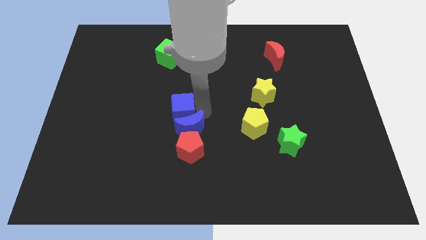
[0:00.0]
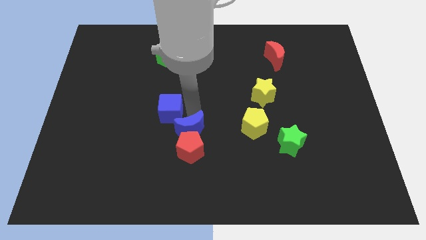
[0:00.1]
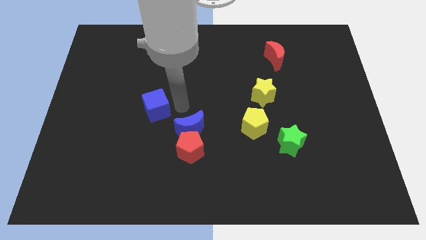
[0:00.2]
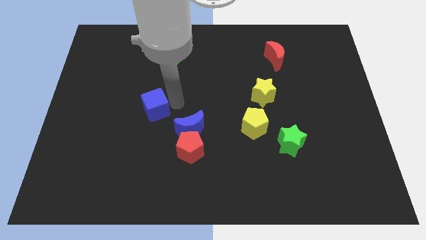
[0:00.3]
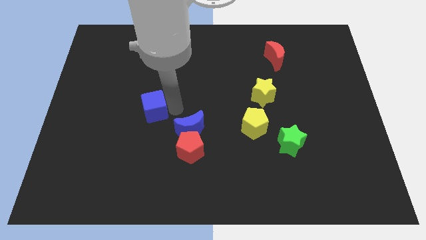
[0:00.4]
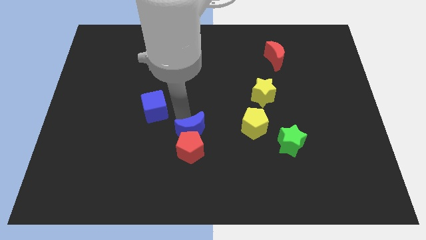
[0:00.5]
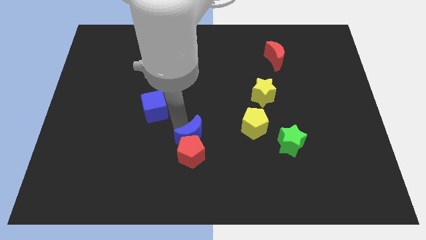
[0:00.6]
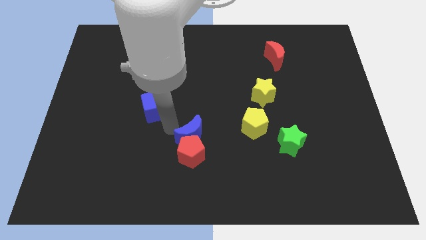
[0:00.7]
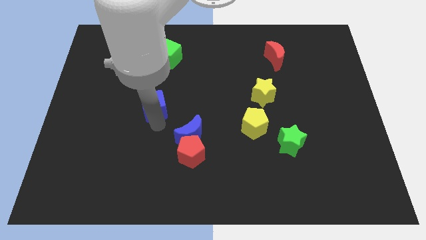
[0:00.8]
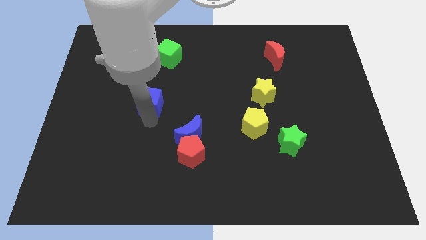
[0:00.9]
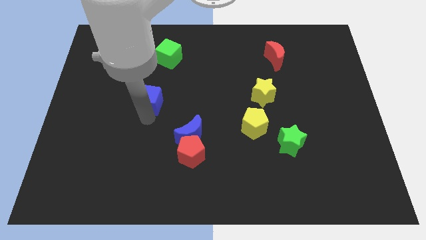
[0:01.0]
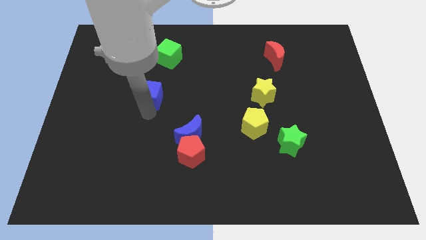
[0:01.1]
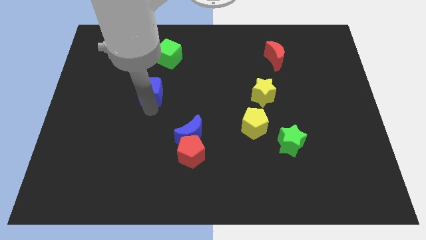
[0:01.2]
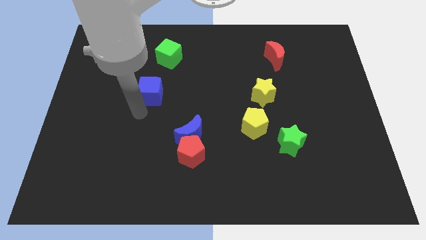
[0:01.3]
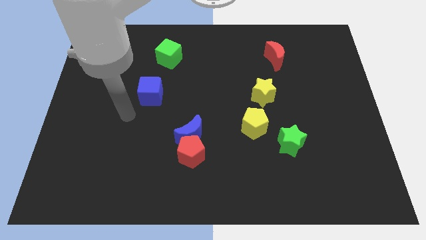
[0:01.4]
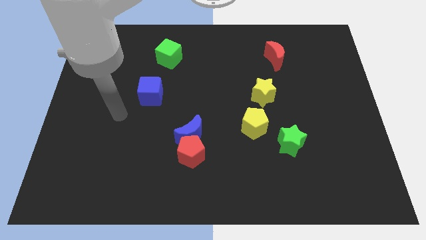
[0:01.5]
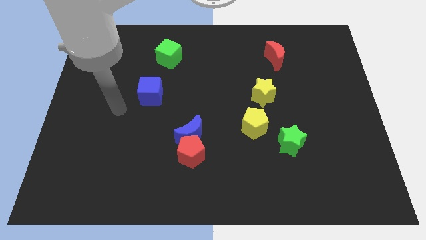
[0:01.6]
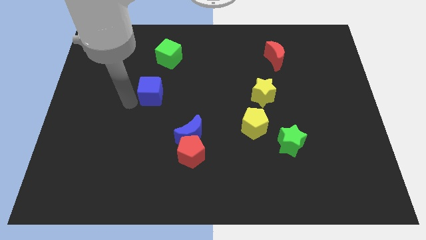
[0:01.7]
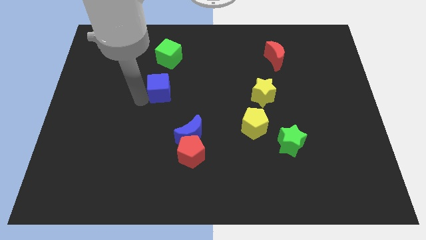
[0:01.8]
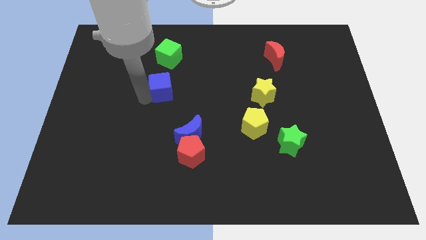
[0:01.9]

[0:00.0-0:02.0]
move the blue cube below the green cube

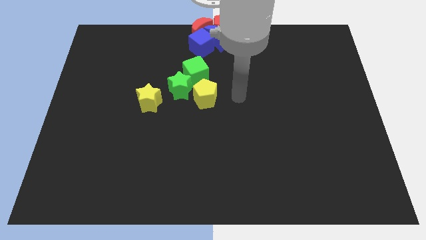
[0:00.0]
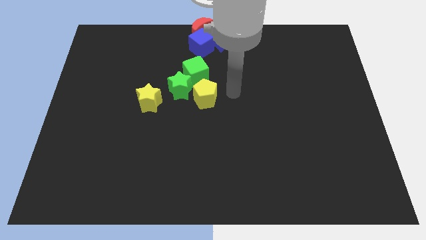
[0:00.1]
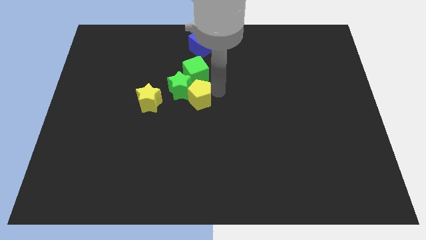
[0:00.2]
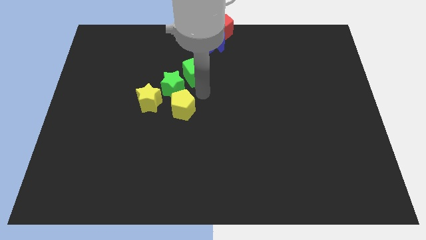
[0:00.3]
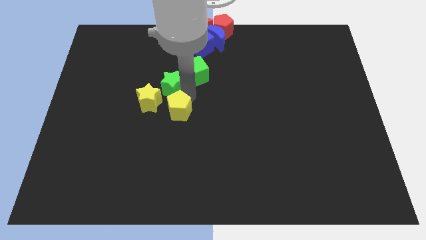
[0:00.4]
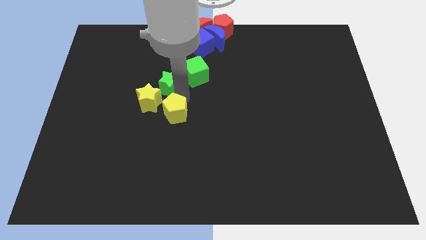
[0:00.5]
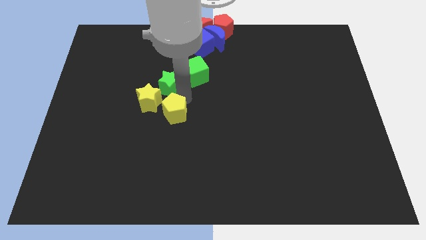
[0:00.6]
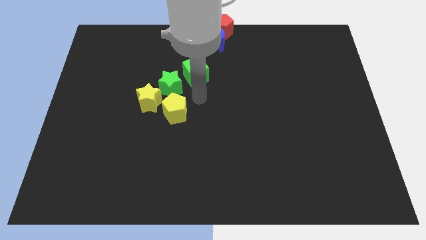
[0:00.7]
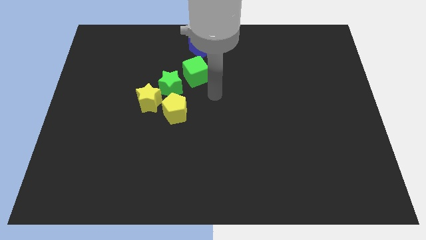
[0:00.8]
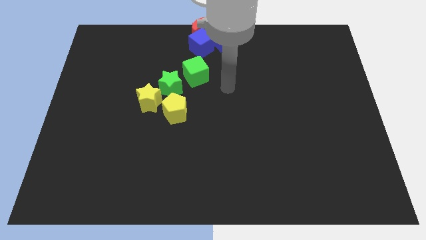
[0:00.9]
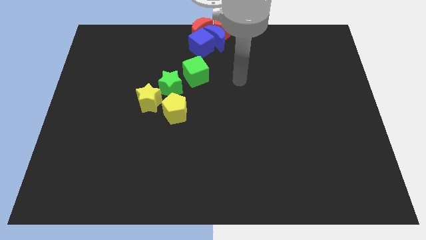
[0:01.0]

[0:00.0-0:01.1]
slightly change the yellow pentagon vertically at the bottom of the green star

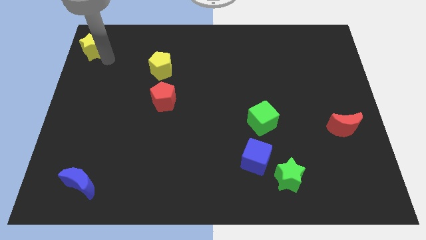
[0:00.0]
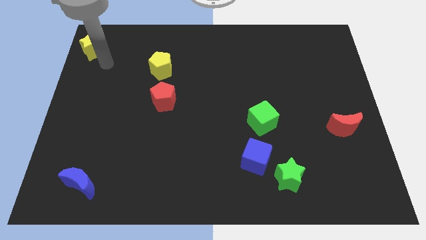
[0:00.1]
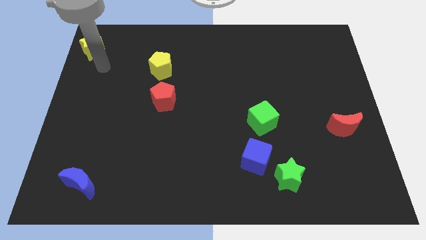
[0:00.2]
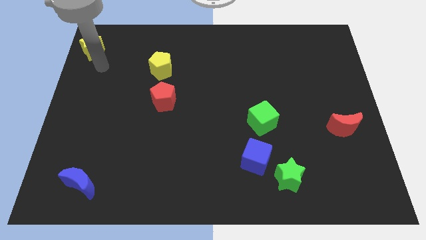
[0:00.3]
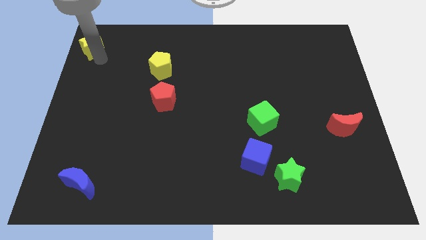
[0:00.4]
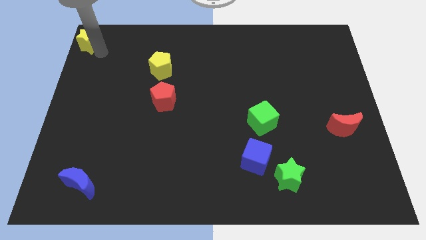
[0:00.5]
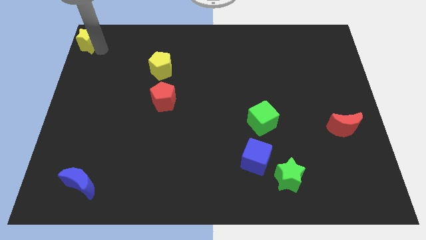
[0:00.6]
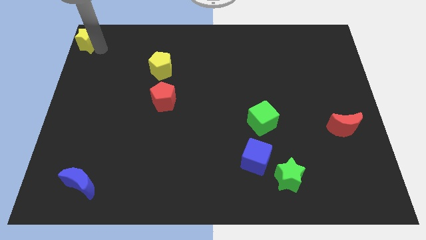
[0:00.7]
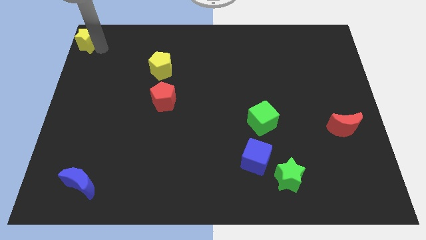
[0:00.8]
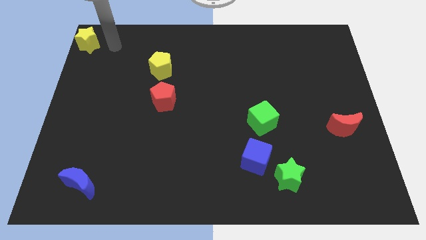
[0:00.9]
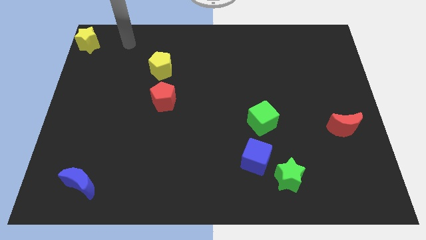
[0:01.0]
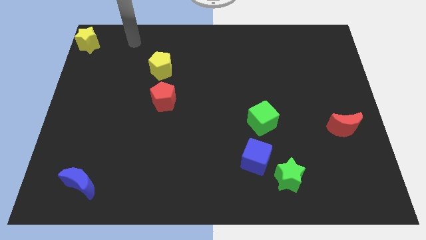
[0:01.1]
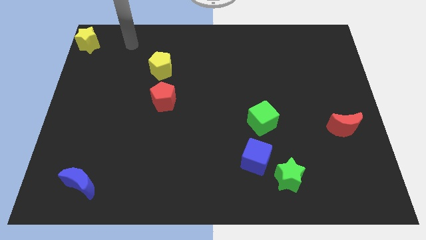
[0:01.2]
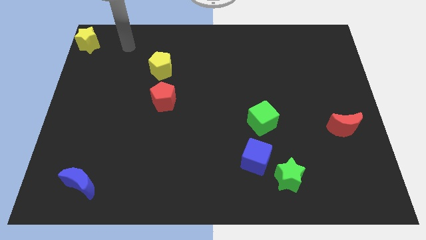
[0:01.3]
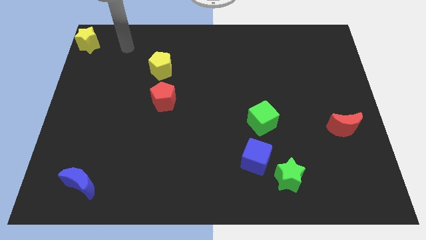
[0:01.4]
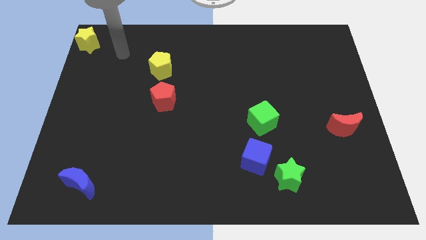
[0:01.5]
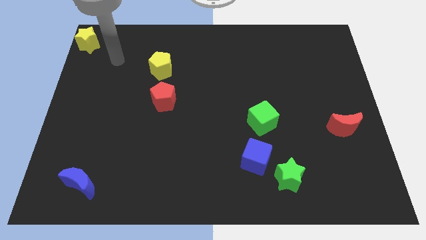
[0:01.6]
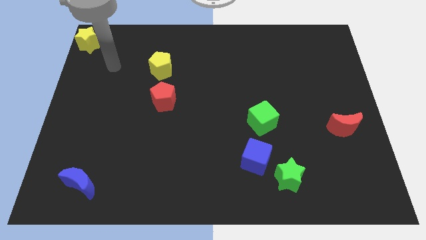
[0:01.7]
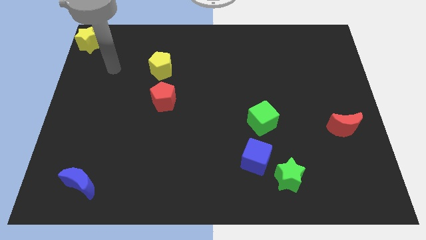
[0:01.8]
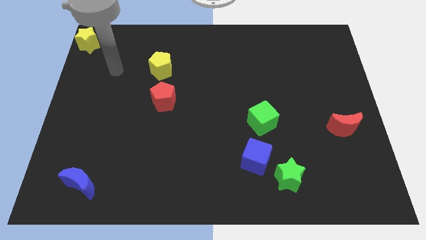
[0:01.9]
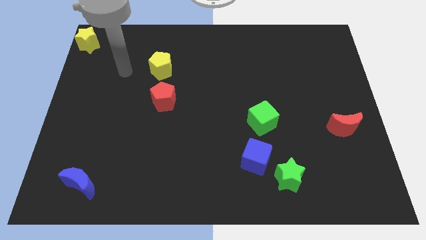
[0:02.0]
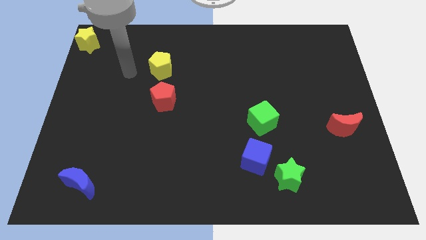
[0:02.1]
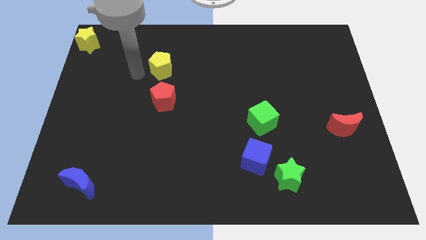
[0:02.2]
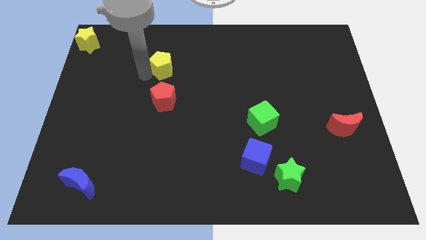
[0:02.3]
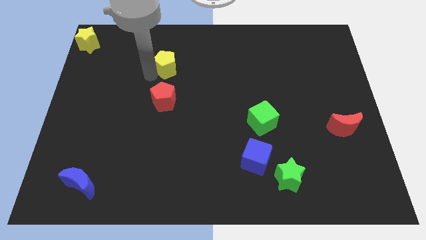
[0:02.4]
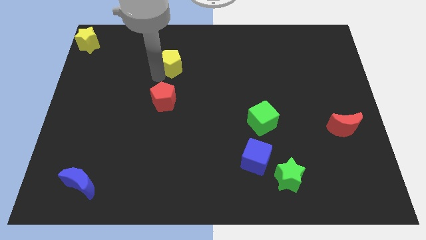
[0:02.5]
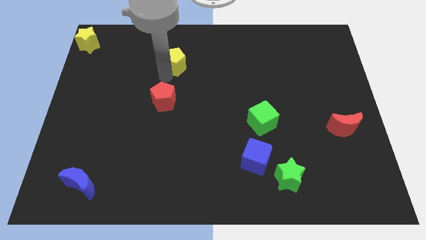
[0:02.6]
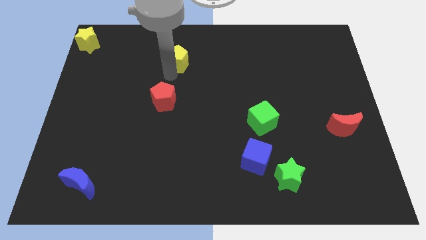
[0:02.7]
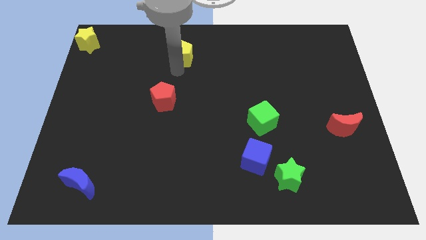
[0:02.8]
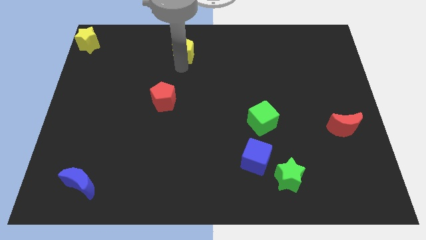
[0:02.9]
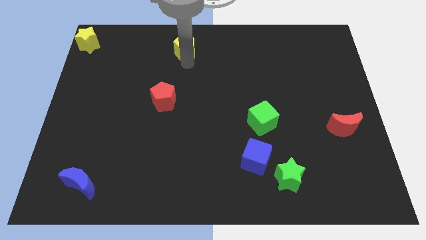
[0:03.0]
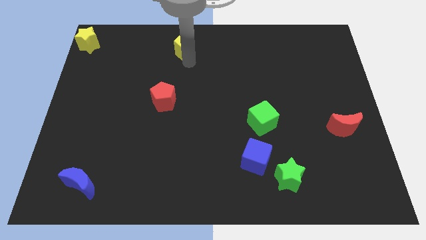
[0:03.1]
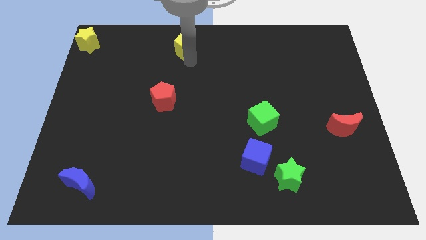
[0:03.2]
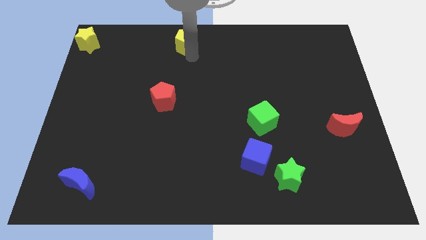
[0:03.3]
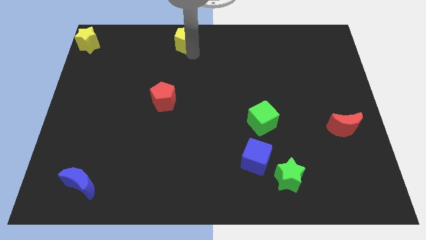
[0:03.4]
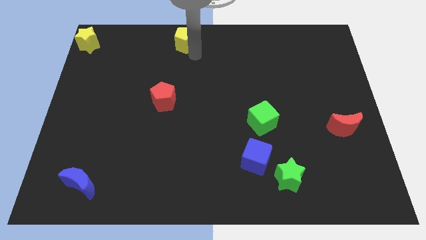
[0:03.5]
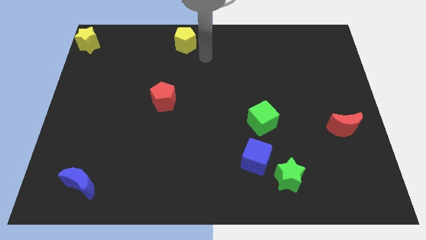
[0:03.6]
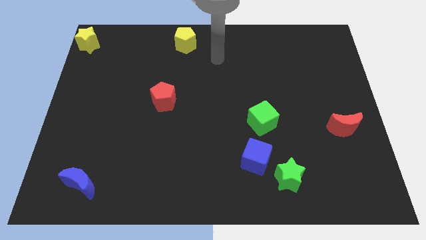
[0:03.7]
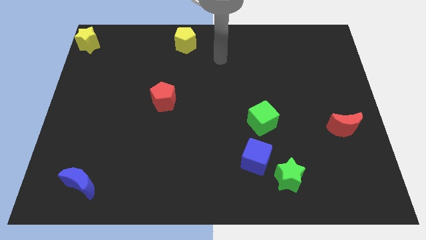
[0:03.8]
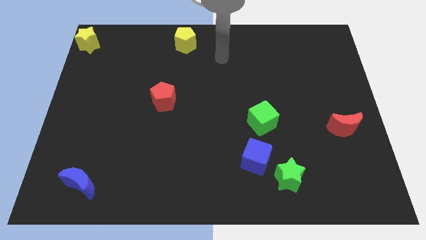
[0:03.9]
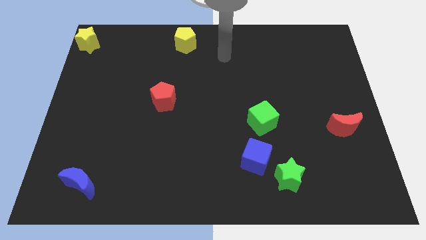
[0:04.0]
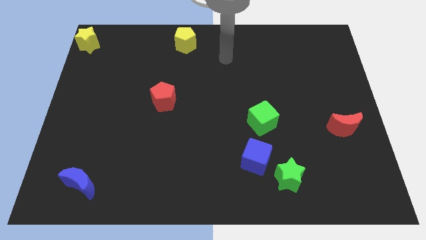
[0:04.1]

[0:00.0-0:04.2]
drag the yellow pentagon upwards

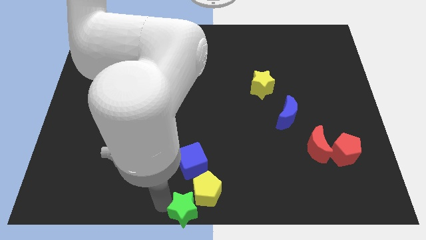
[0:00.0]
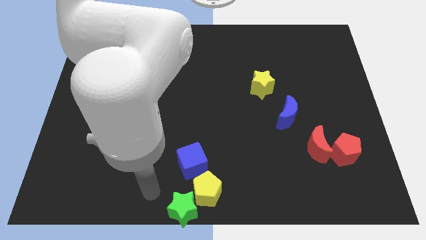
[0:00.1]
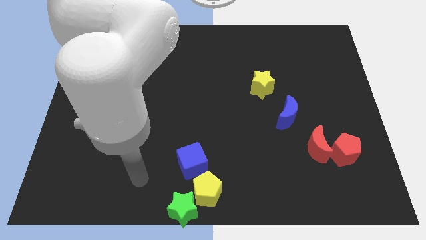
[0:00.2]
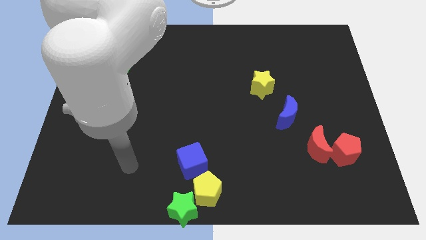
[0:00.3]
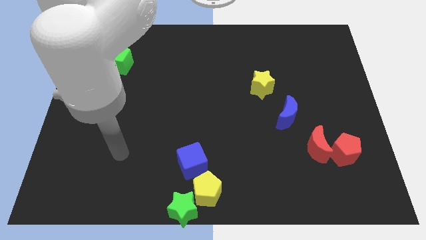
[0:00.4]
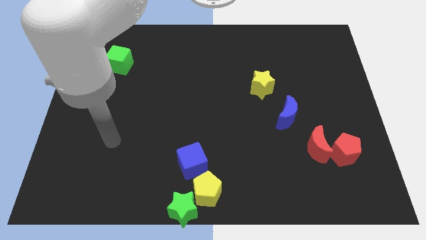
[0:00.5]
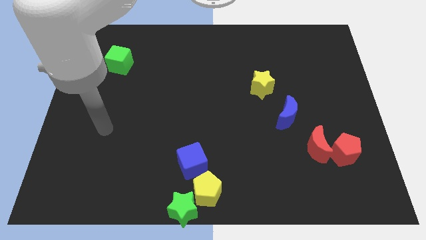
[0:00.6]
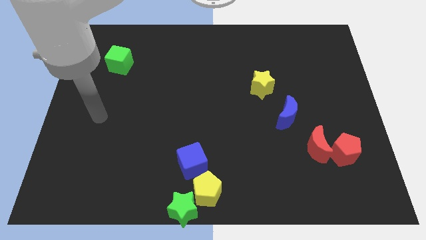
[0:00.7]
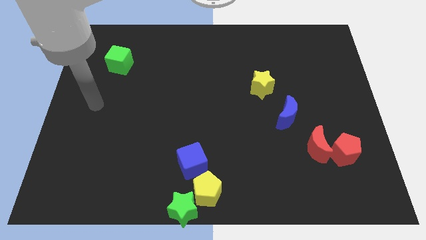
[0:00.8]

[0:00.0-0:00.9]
move the arm away from the green star

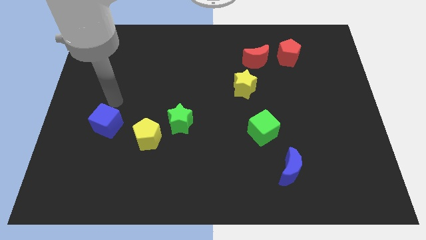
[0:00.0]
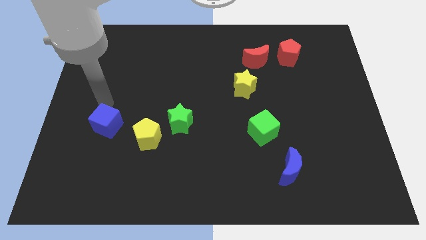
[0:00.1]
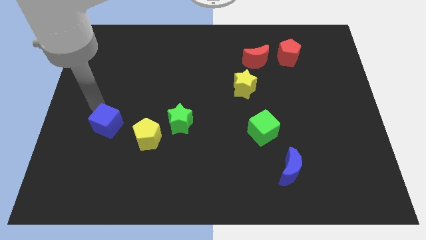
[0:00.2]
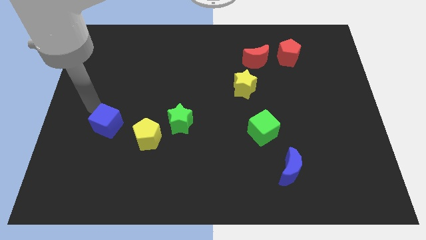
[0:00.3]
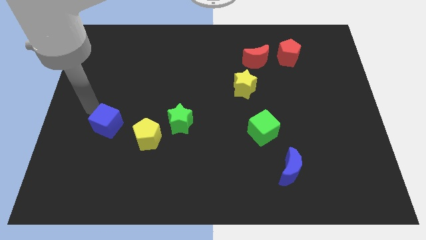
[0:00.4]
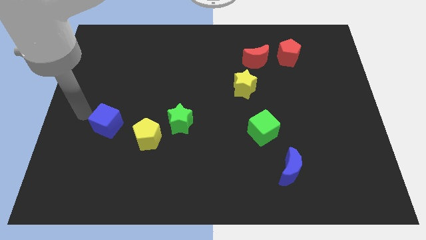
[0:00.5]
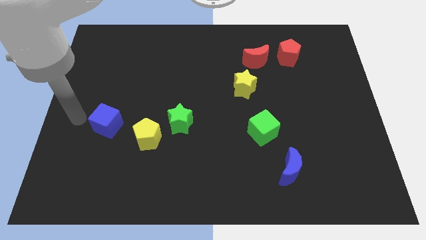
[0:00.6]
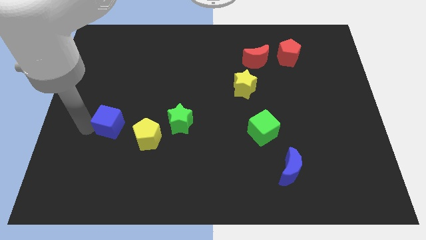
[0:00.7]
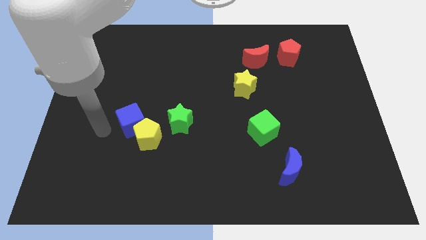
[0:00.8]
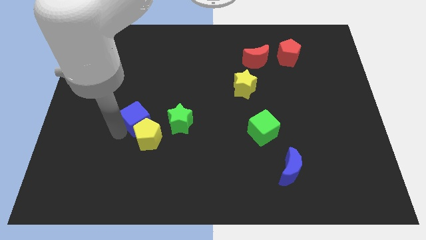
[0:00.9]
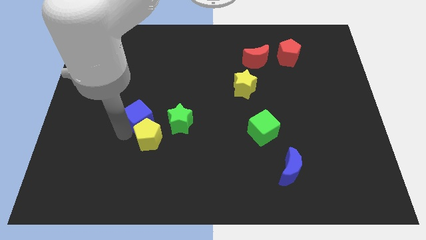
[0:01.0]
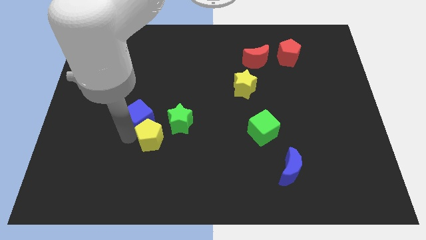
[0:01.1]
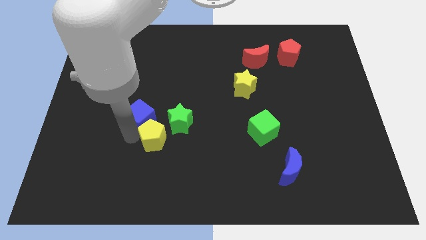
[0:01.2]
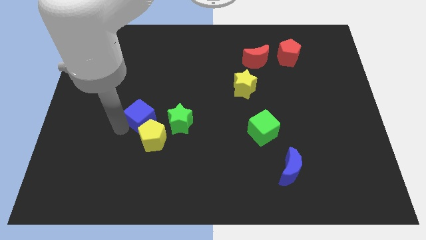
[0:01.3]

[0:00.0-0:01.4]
move blue cube to the top left of yellow pentagon
